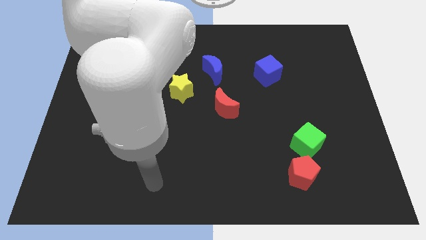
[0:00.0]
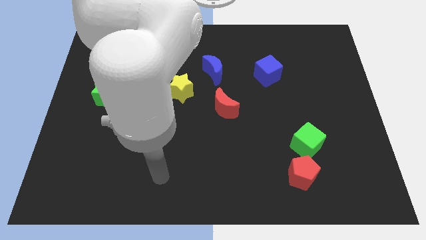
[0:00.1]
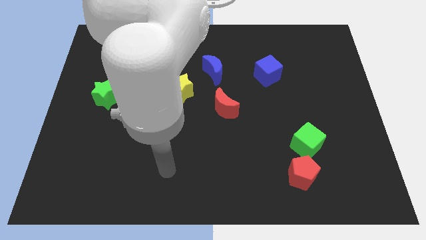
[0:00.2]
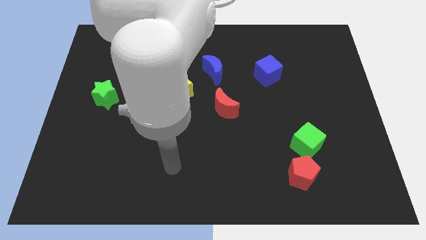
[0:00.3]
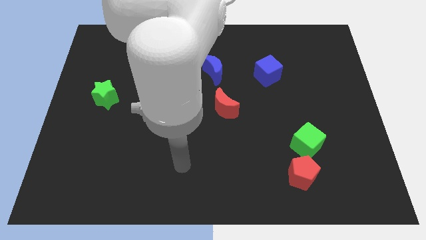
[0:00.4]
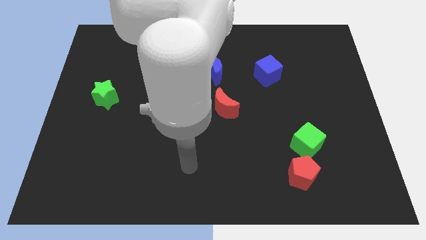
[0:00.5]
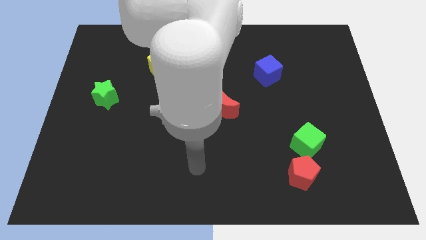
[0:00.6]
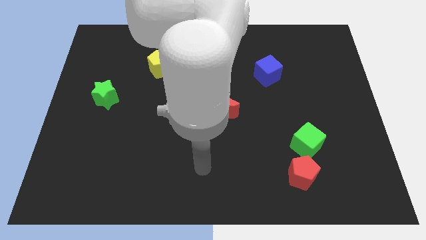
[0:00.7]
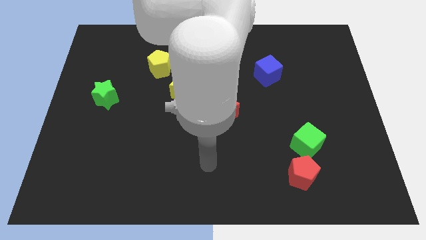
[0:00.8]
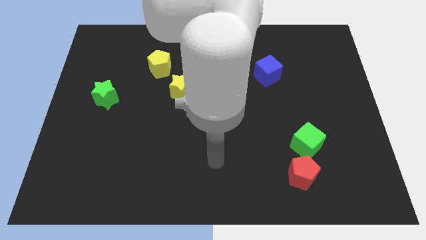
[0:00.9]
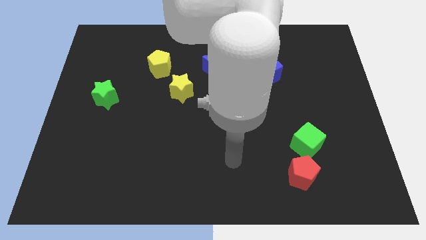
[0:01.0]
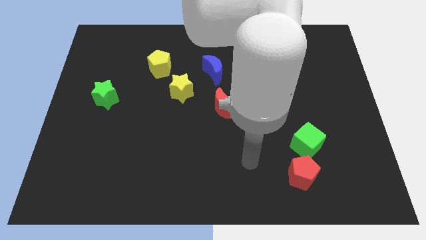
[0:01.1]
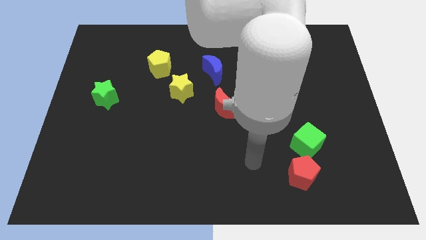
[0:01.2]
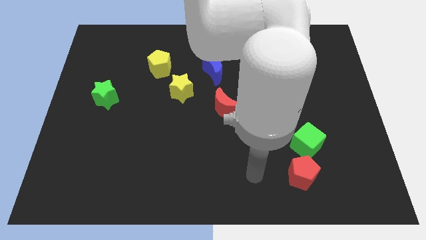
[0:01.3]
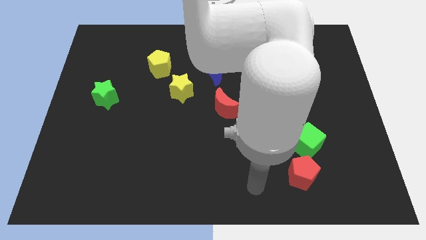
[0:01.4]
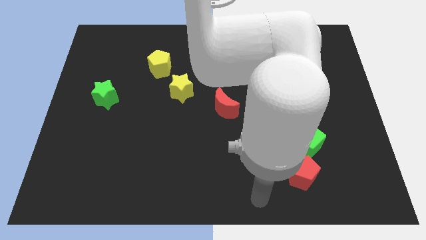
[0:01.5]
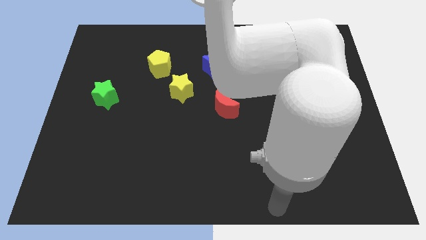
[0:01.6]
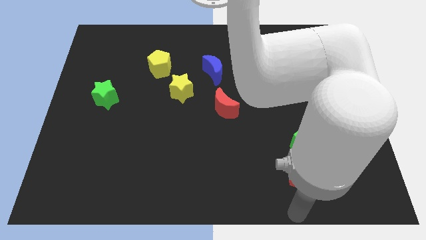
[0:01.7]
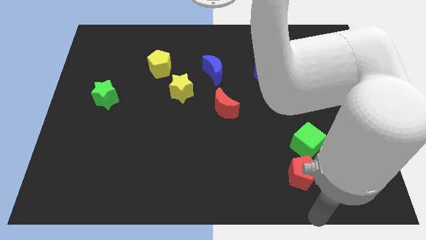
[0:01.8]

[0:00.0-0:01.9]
push your arm towards the bottom right of the board

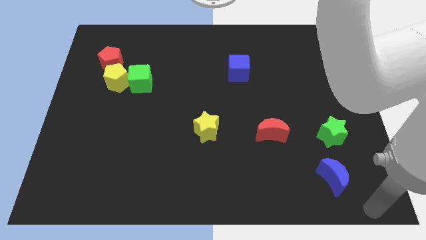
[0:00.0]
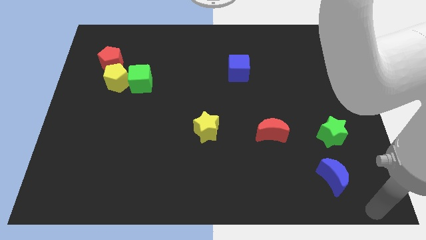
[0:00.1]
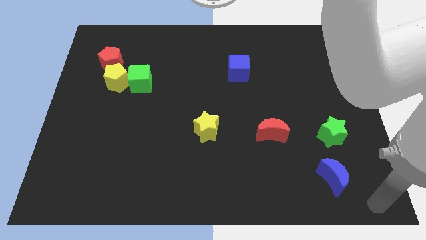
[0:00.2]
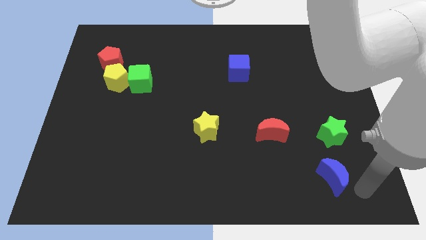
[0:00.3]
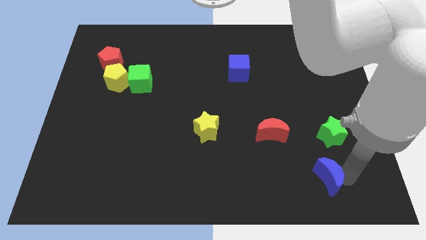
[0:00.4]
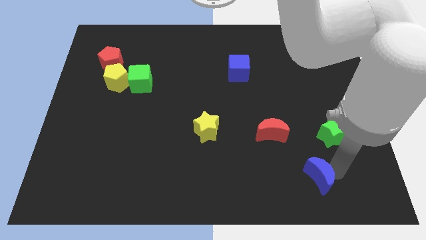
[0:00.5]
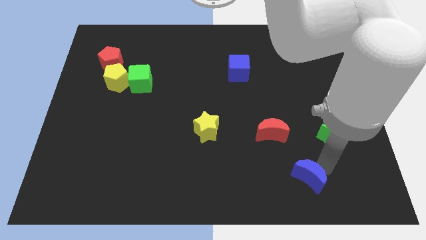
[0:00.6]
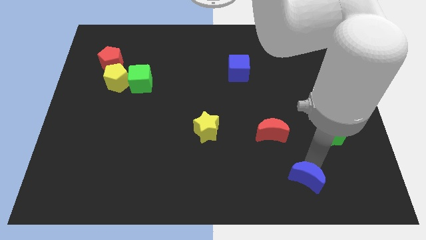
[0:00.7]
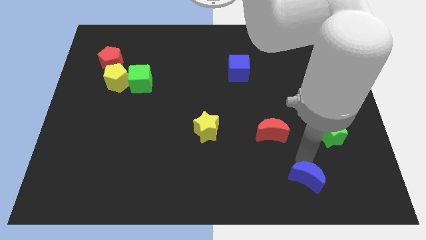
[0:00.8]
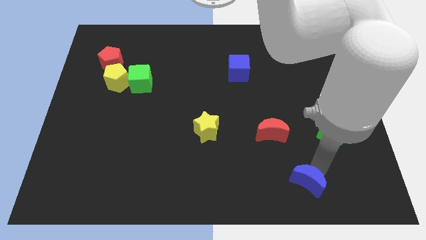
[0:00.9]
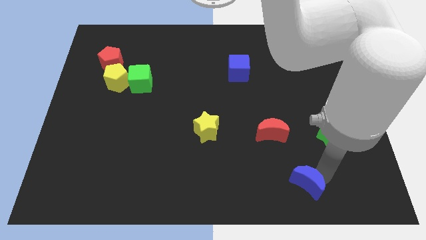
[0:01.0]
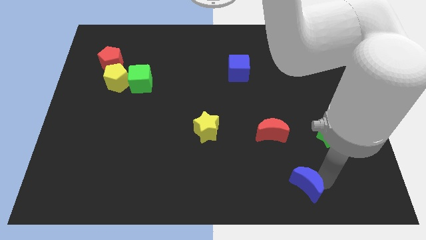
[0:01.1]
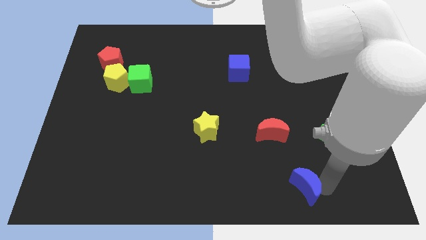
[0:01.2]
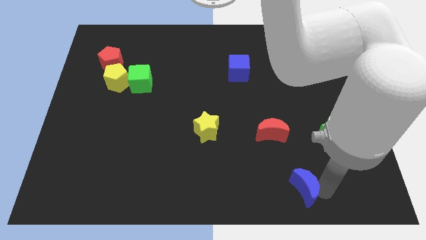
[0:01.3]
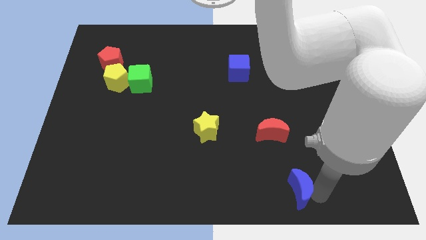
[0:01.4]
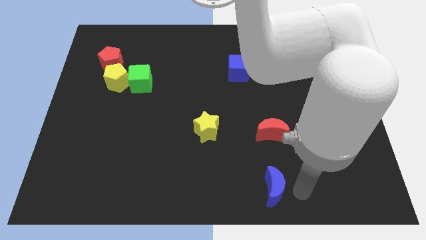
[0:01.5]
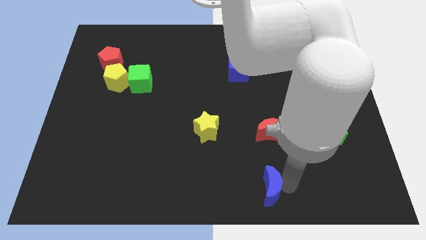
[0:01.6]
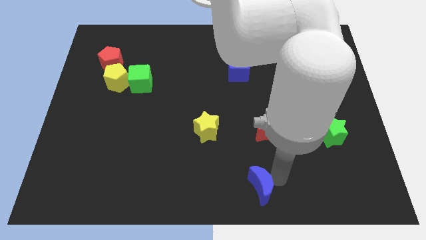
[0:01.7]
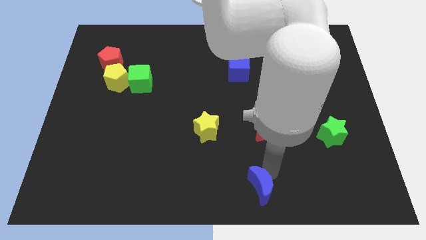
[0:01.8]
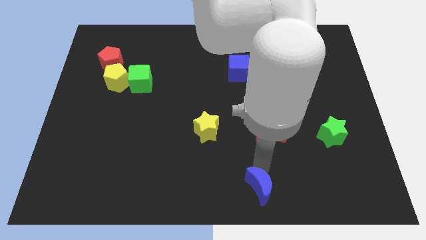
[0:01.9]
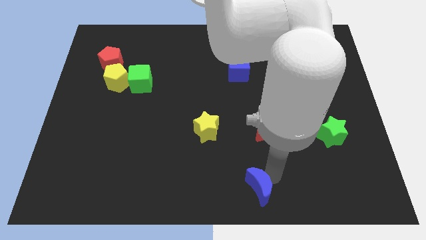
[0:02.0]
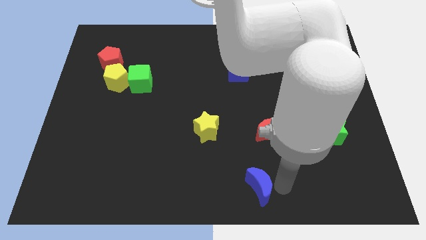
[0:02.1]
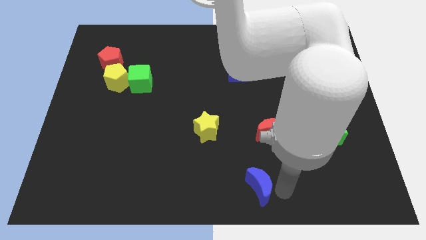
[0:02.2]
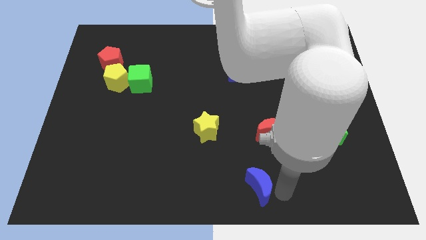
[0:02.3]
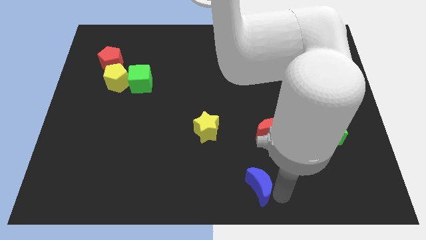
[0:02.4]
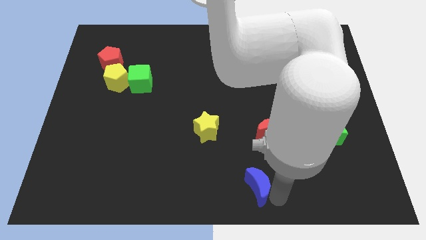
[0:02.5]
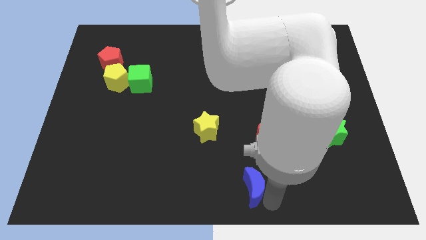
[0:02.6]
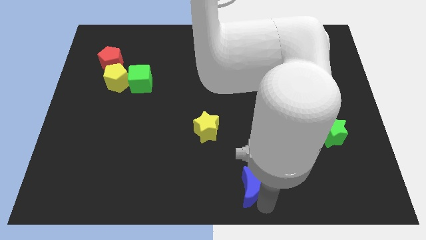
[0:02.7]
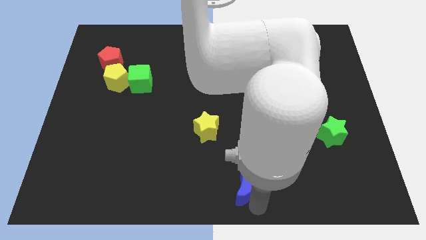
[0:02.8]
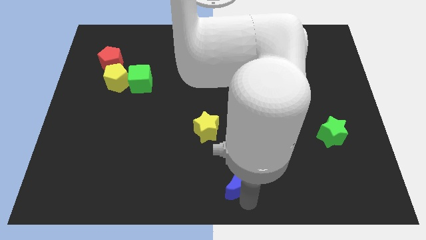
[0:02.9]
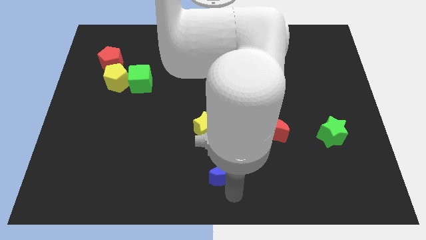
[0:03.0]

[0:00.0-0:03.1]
place blue moon to bottom right of yellow star

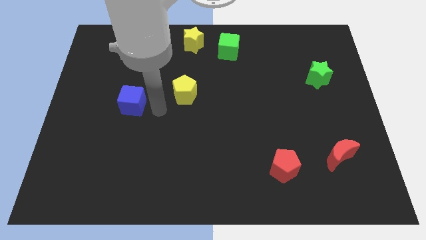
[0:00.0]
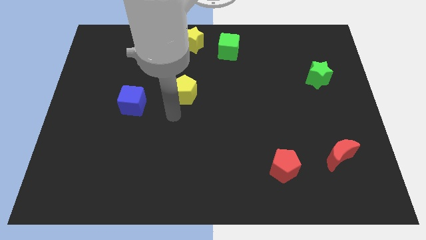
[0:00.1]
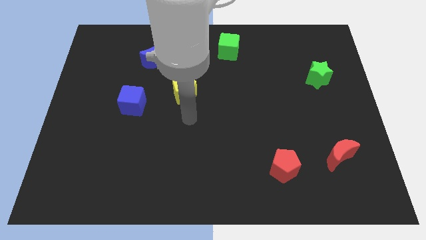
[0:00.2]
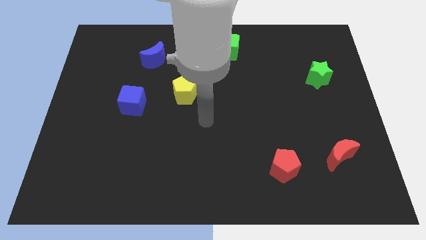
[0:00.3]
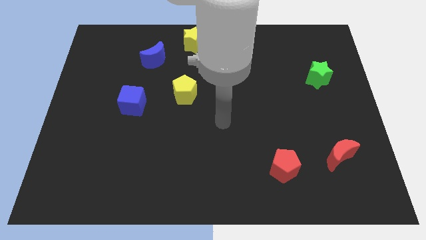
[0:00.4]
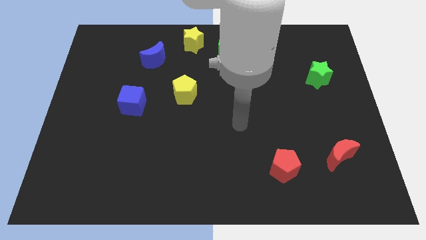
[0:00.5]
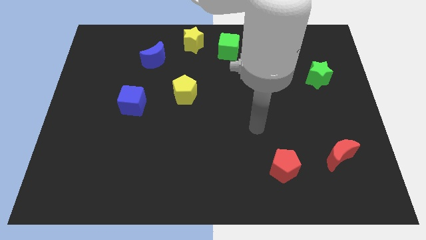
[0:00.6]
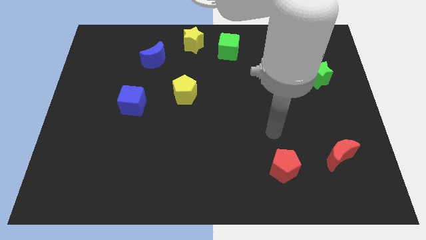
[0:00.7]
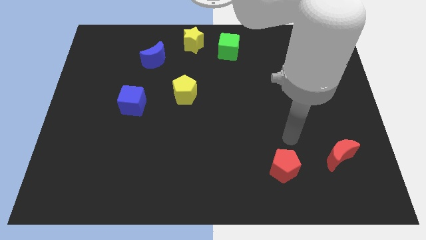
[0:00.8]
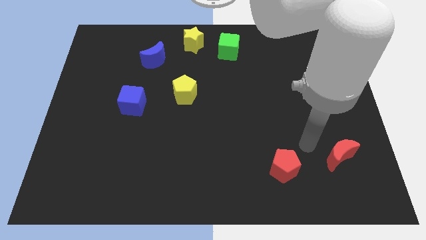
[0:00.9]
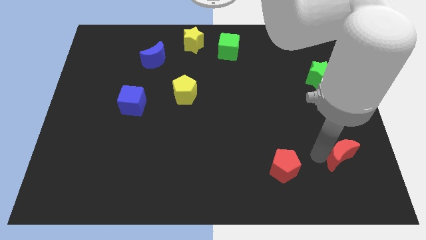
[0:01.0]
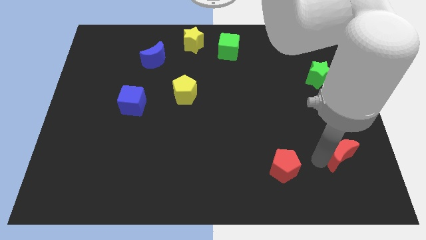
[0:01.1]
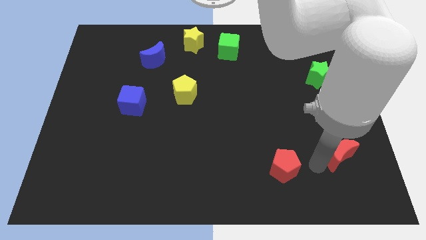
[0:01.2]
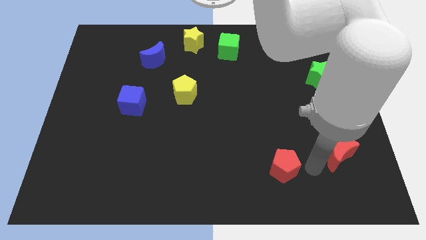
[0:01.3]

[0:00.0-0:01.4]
put your arm in between red pentagon and the red moon

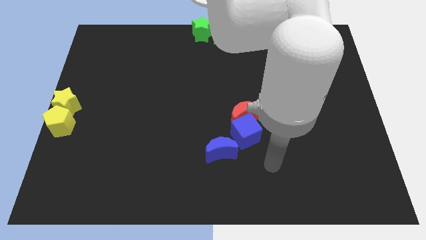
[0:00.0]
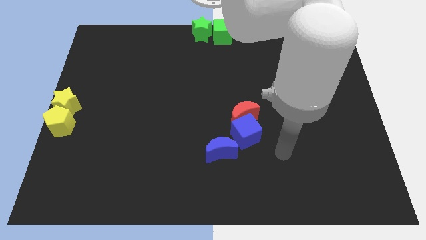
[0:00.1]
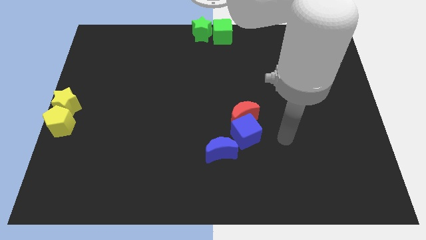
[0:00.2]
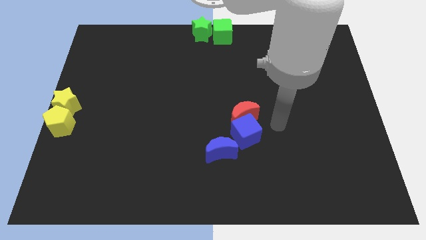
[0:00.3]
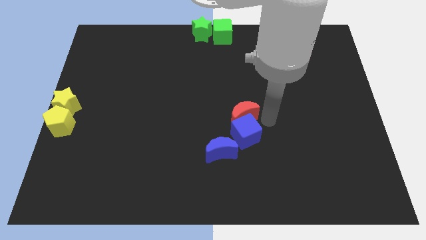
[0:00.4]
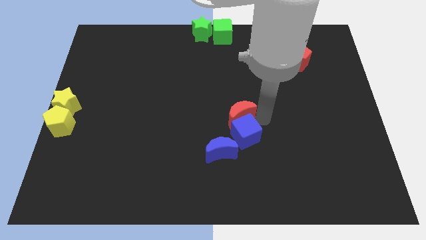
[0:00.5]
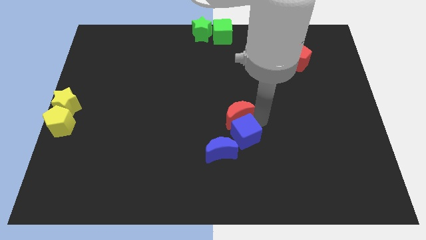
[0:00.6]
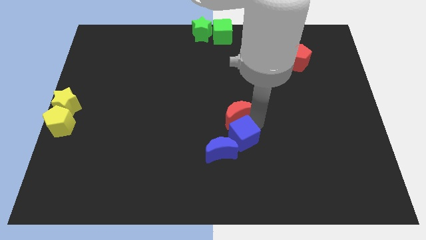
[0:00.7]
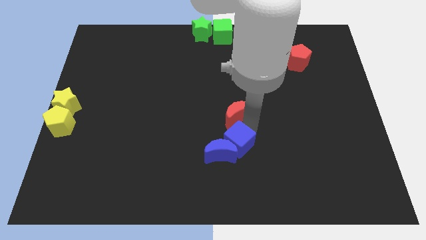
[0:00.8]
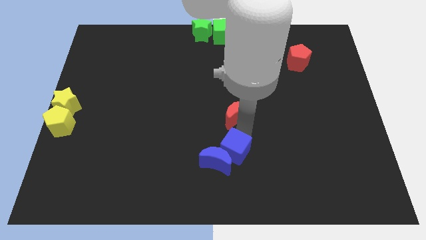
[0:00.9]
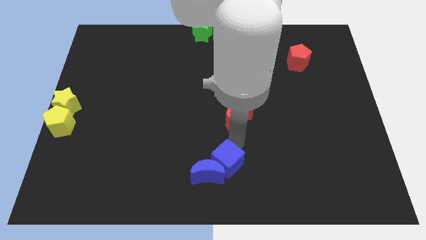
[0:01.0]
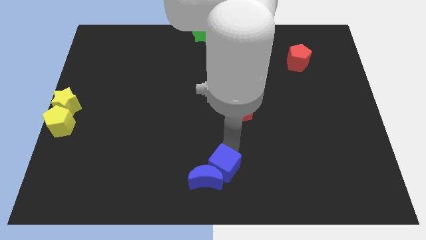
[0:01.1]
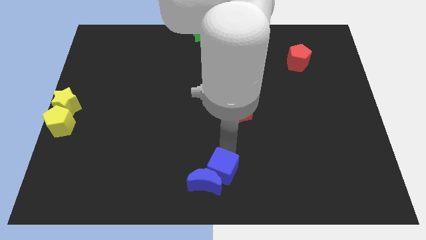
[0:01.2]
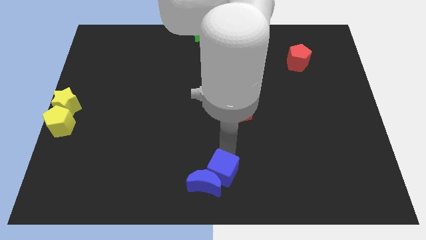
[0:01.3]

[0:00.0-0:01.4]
separate the blue blocks from the red moon

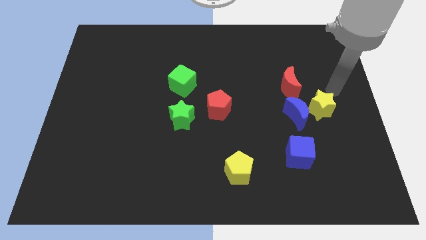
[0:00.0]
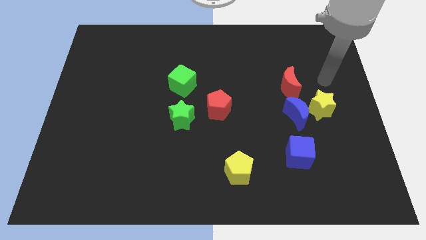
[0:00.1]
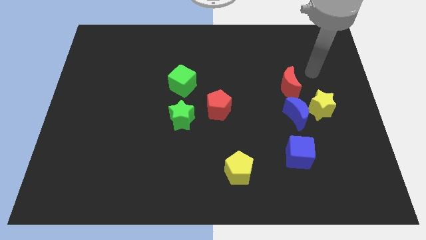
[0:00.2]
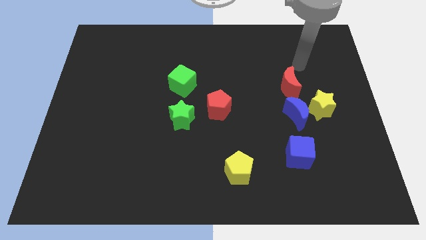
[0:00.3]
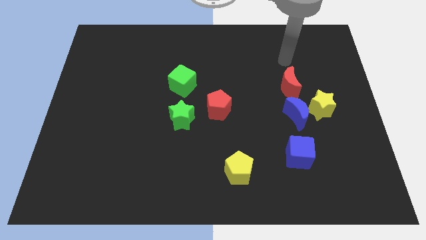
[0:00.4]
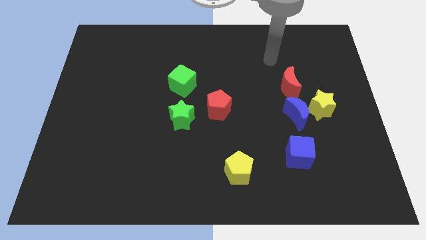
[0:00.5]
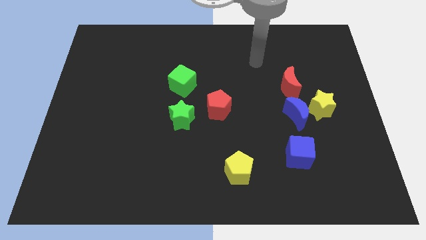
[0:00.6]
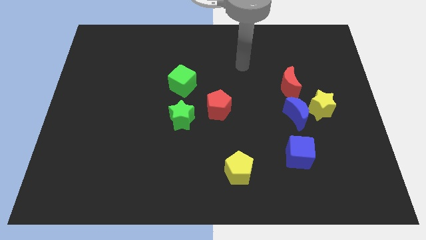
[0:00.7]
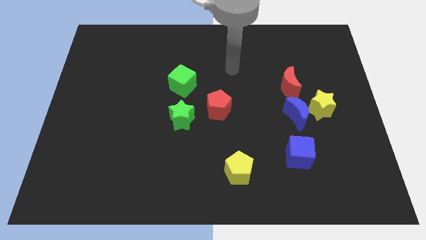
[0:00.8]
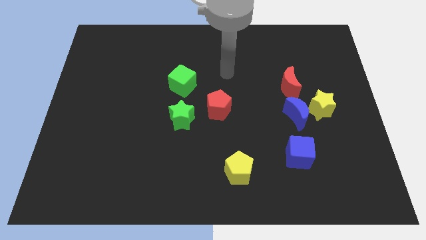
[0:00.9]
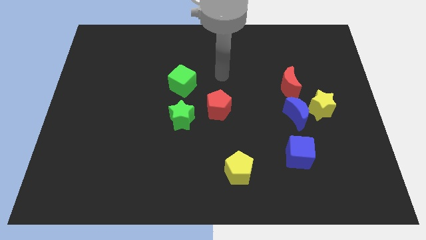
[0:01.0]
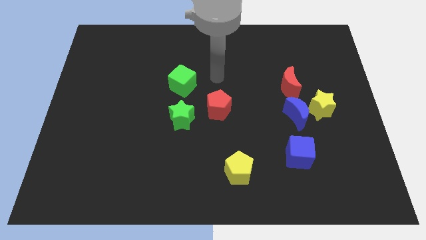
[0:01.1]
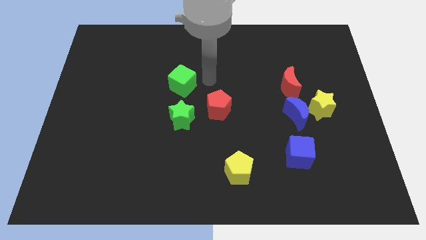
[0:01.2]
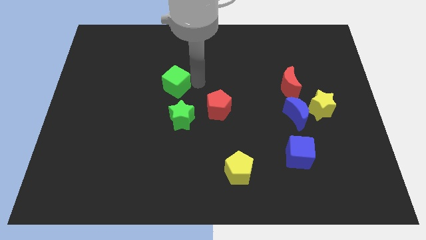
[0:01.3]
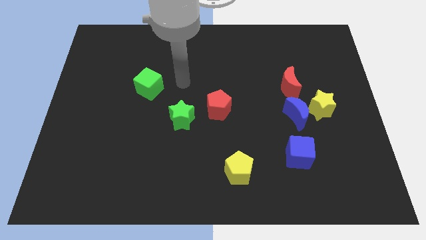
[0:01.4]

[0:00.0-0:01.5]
move your arm away from yellow star
